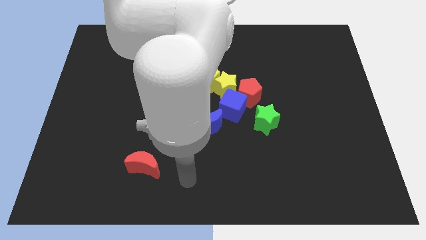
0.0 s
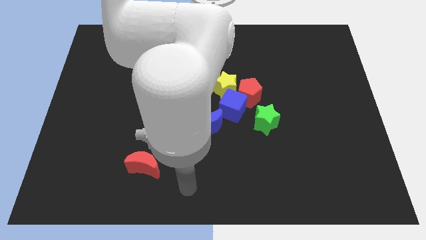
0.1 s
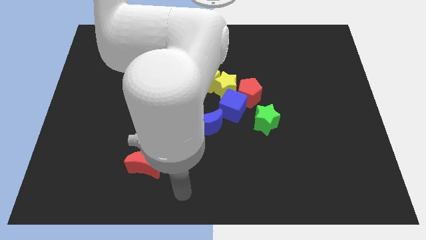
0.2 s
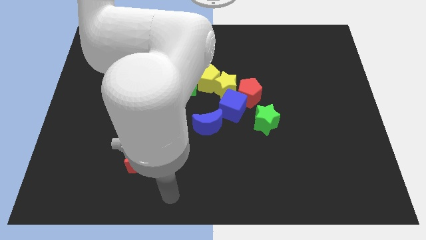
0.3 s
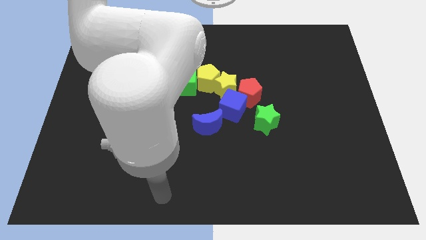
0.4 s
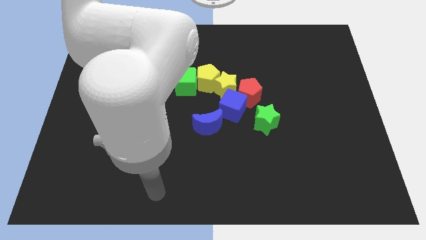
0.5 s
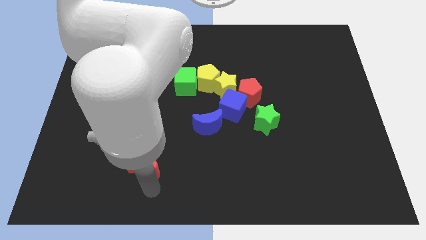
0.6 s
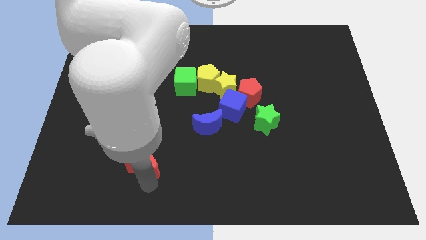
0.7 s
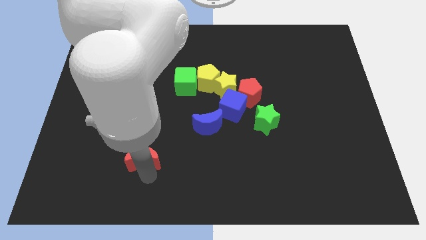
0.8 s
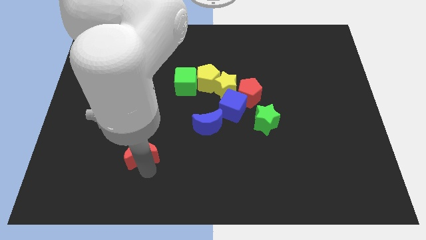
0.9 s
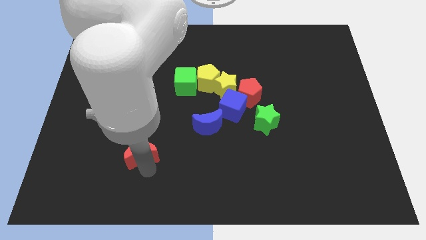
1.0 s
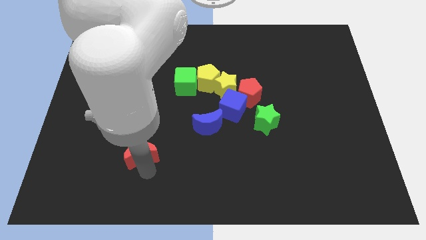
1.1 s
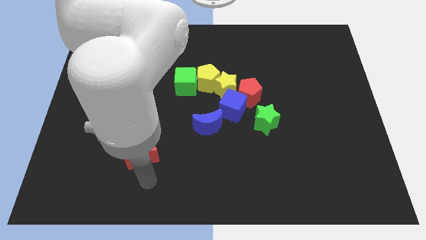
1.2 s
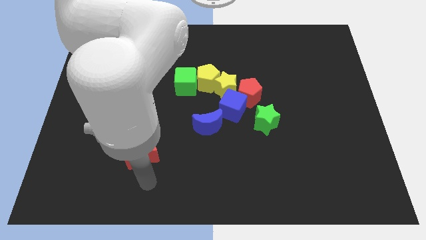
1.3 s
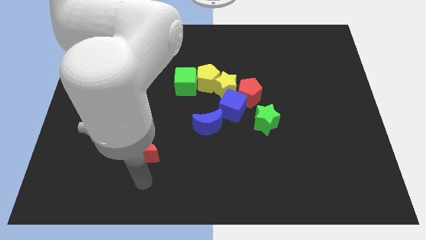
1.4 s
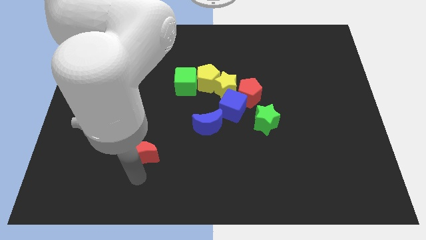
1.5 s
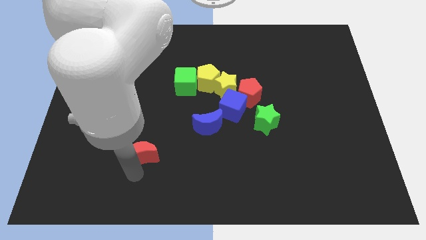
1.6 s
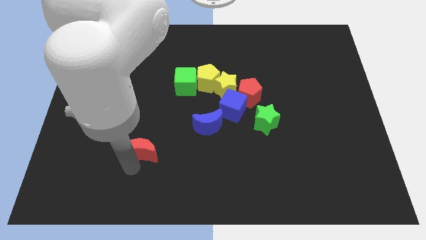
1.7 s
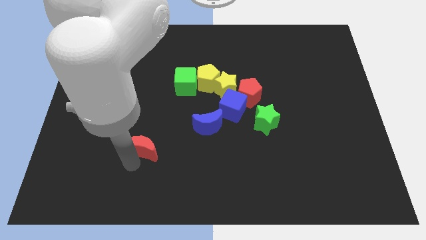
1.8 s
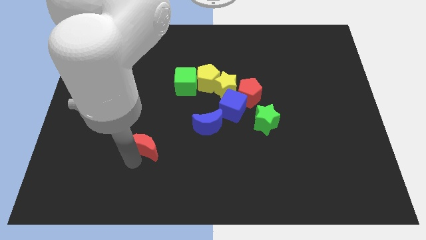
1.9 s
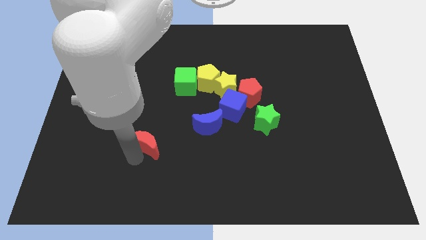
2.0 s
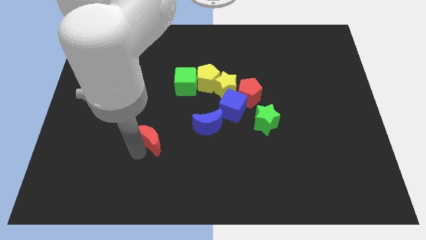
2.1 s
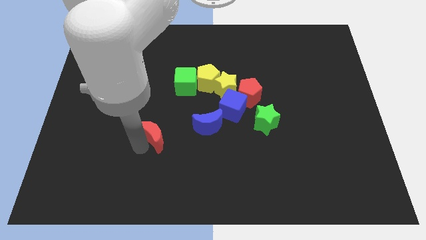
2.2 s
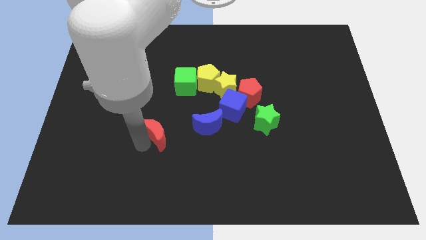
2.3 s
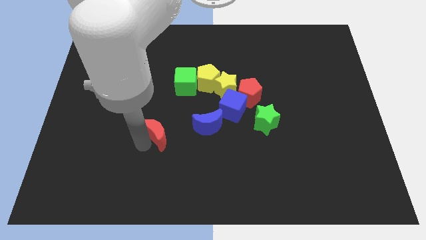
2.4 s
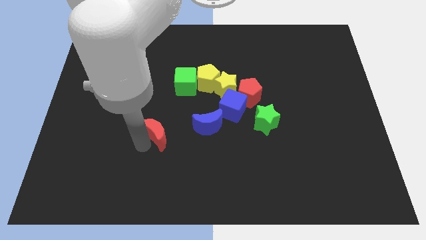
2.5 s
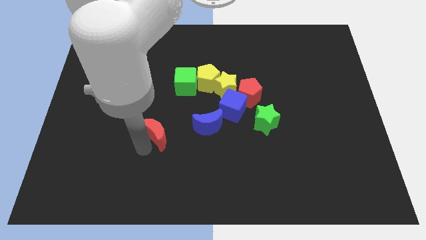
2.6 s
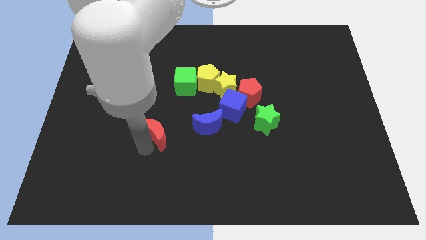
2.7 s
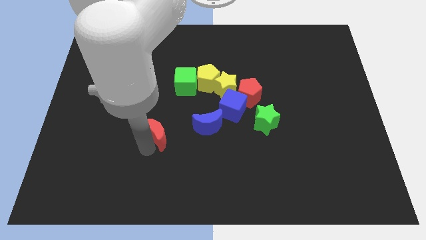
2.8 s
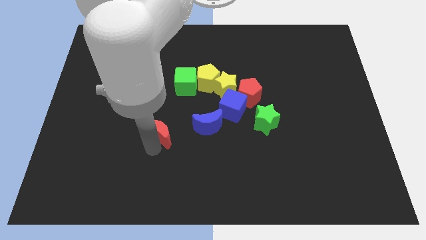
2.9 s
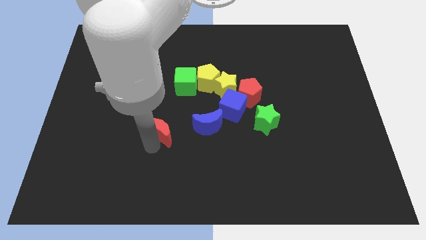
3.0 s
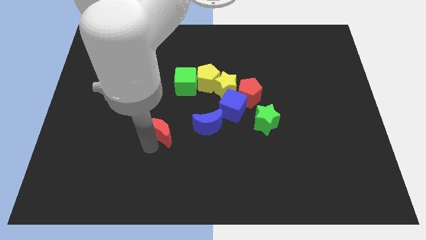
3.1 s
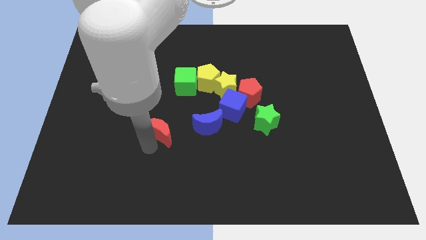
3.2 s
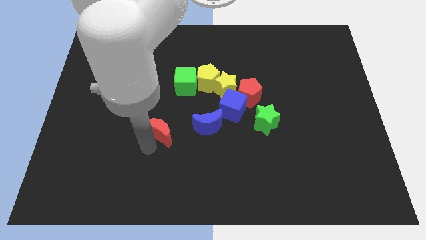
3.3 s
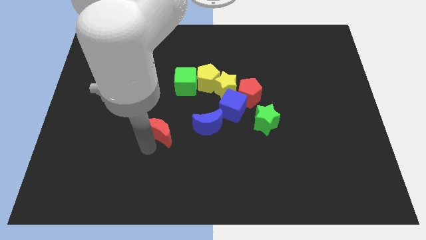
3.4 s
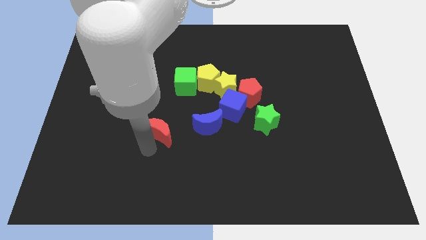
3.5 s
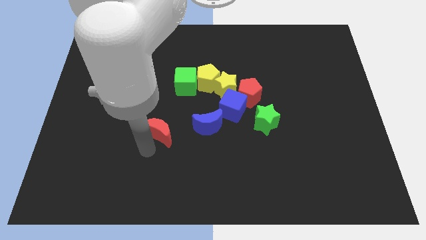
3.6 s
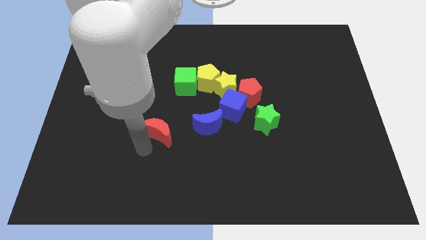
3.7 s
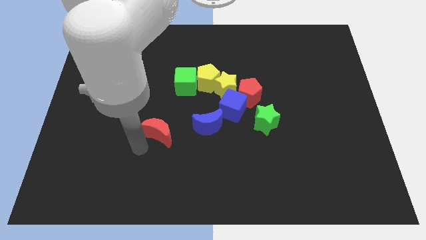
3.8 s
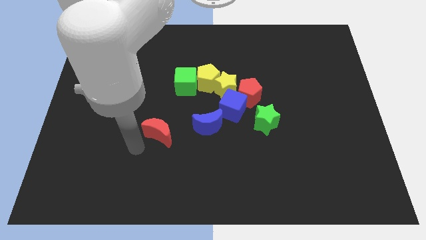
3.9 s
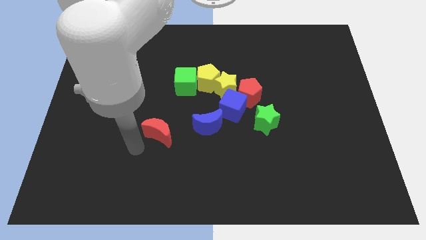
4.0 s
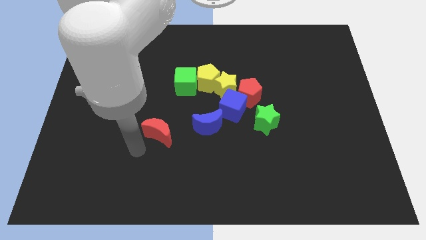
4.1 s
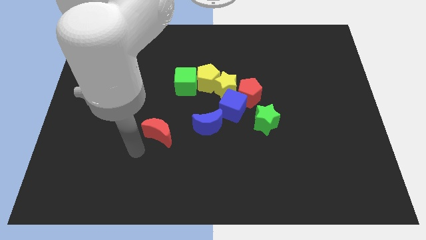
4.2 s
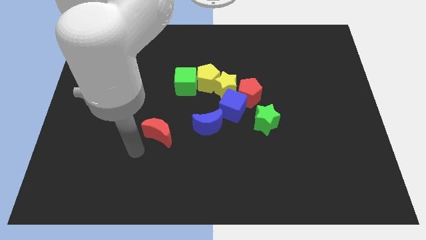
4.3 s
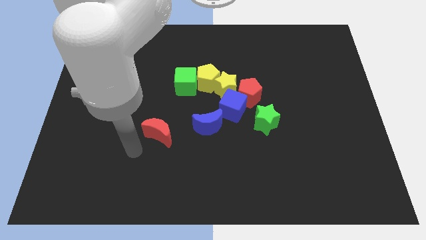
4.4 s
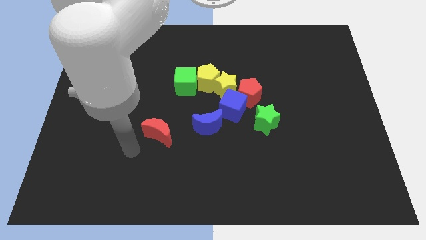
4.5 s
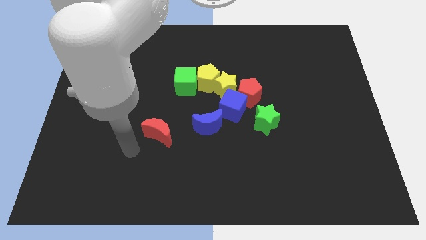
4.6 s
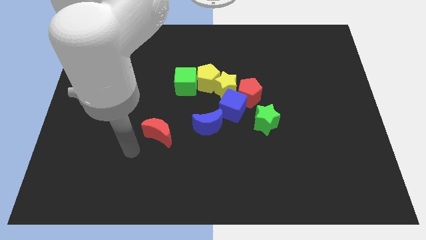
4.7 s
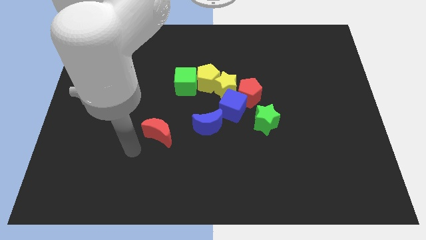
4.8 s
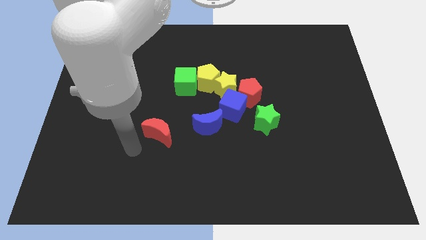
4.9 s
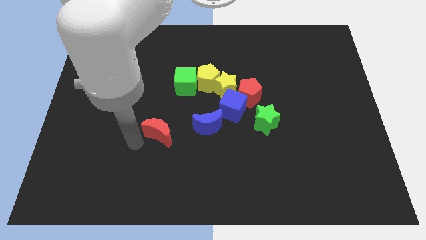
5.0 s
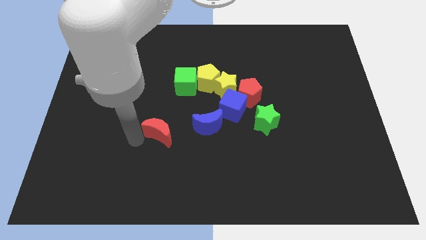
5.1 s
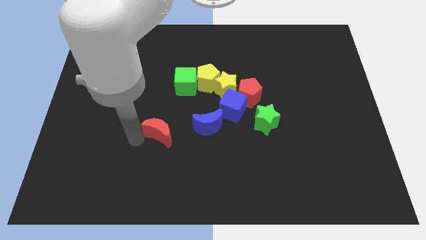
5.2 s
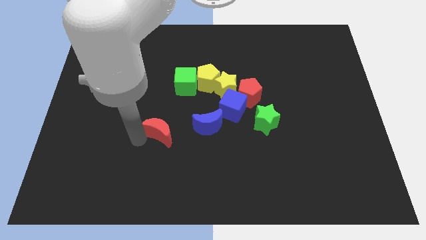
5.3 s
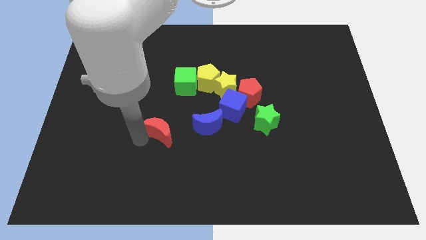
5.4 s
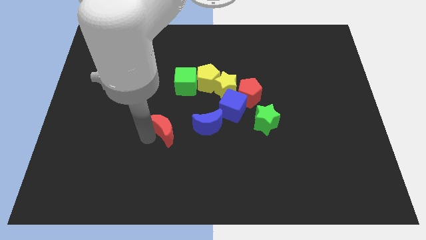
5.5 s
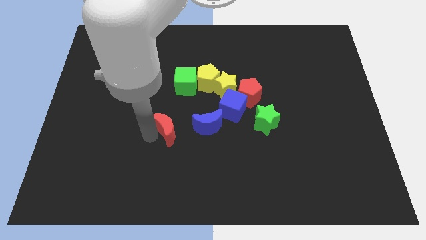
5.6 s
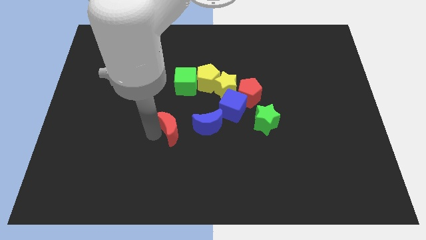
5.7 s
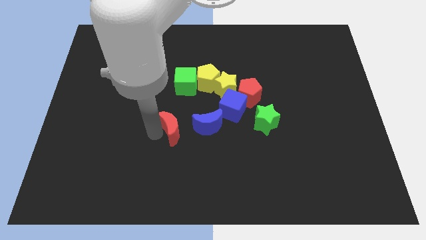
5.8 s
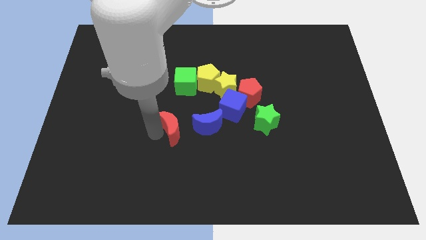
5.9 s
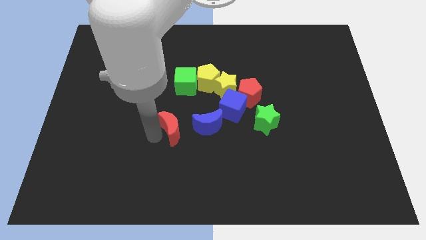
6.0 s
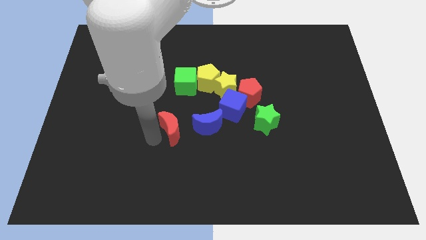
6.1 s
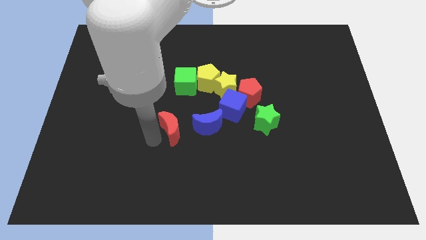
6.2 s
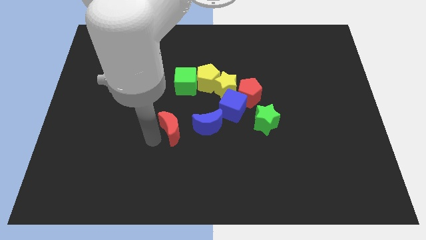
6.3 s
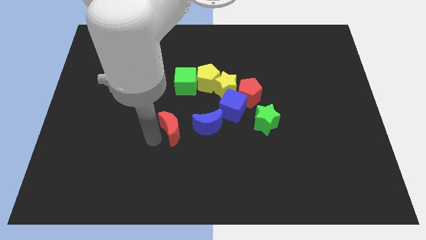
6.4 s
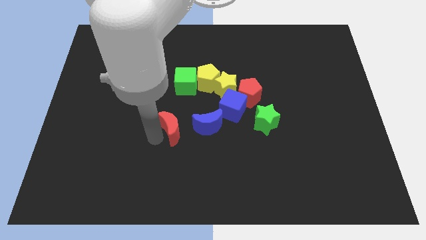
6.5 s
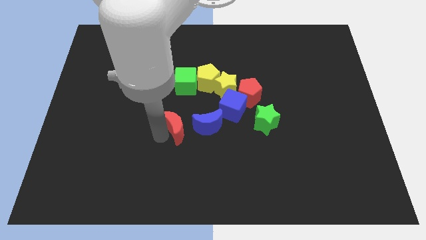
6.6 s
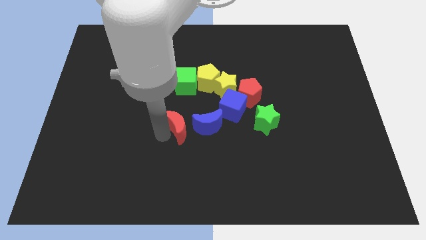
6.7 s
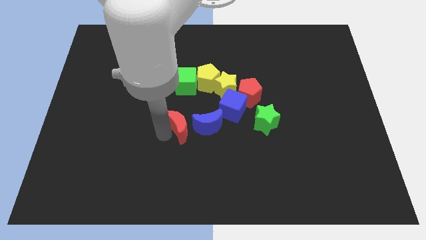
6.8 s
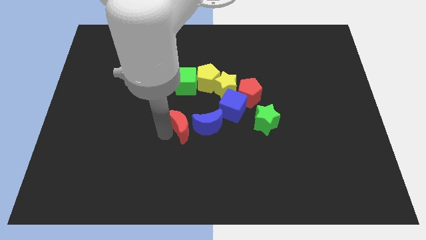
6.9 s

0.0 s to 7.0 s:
push the red crescent towards the blue crescent

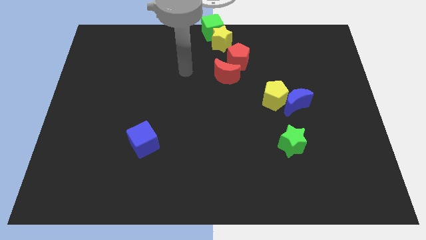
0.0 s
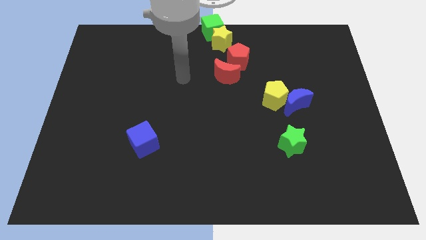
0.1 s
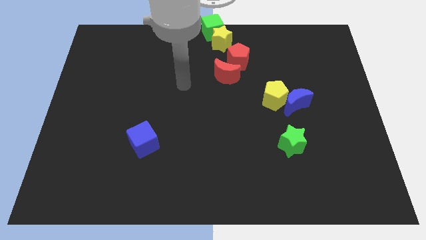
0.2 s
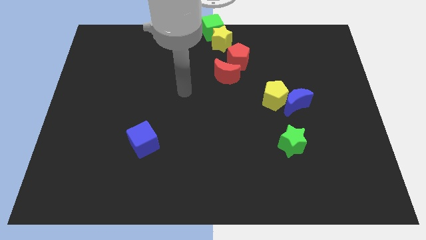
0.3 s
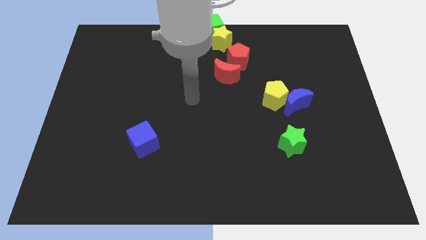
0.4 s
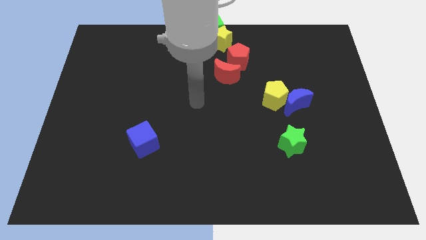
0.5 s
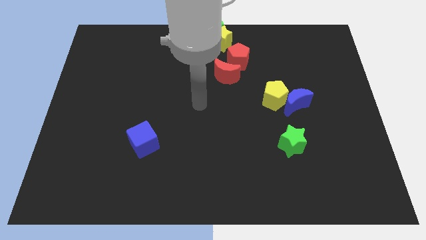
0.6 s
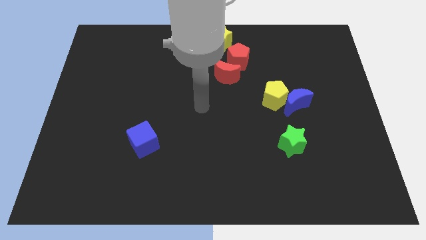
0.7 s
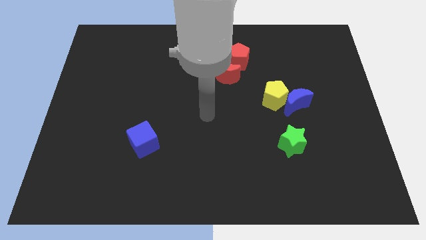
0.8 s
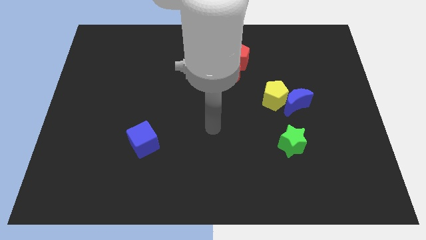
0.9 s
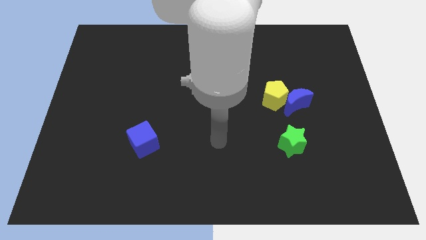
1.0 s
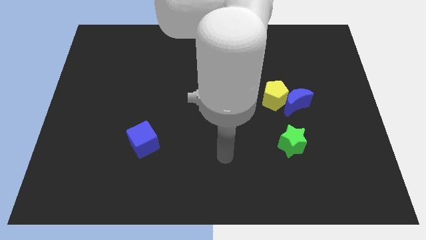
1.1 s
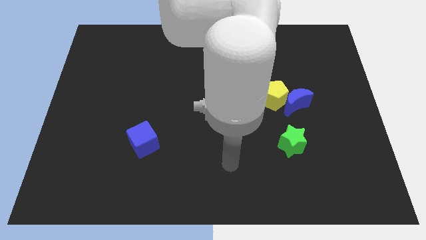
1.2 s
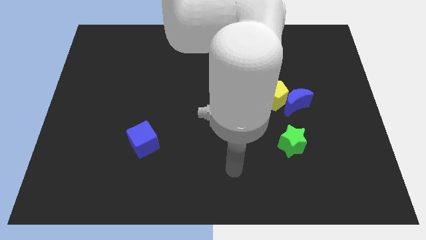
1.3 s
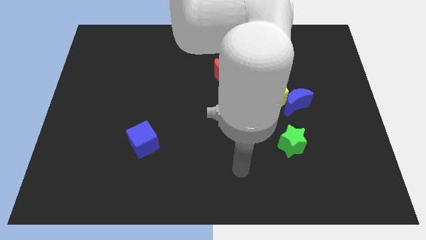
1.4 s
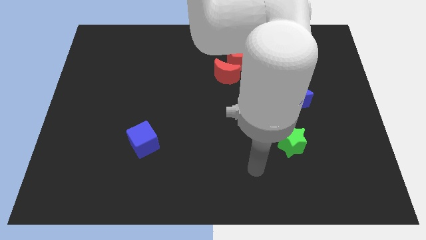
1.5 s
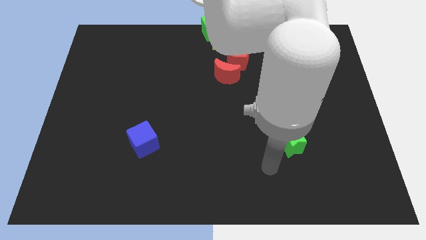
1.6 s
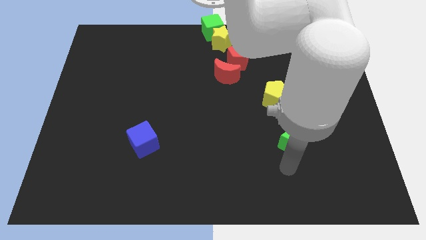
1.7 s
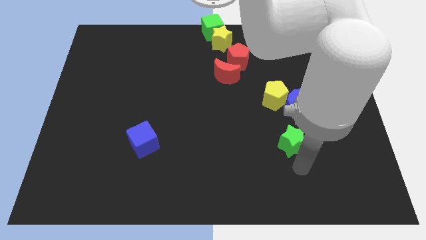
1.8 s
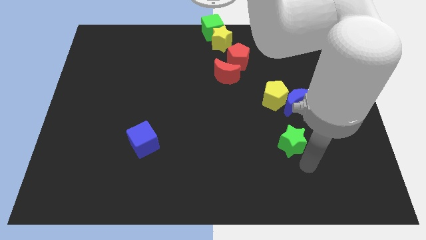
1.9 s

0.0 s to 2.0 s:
place your arm below the green star
